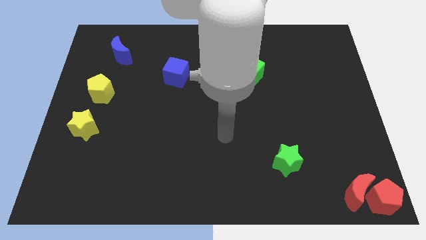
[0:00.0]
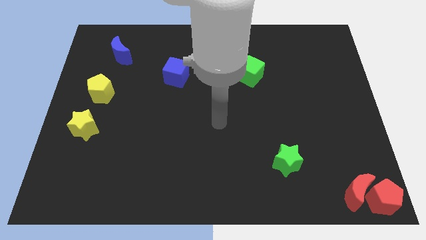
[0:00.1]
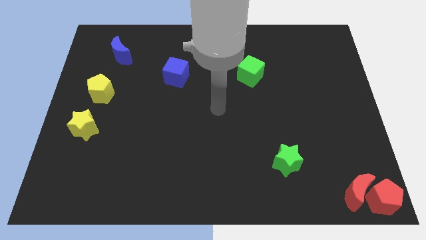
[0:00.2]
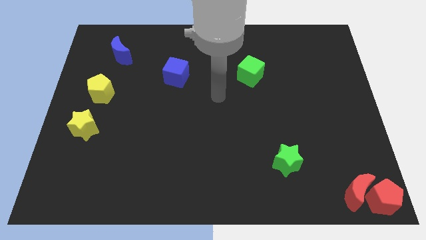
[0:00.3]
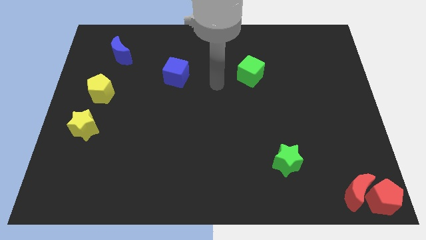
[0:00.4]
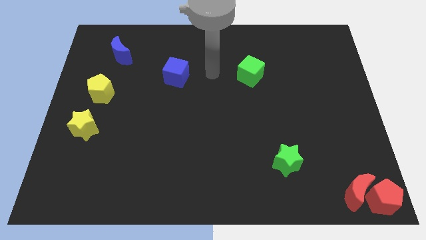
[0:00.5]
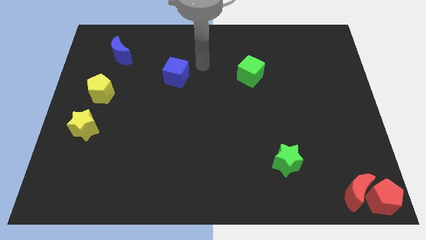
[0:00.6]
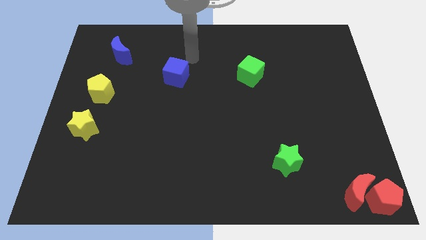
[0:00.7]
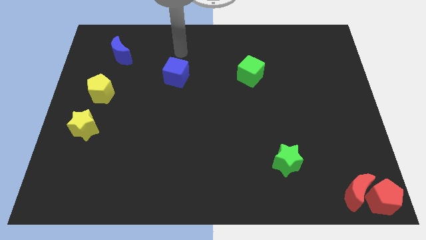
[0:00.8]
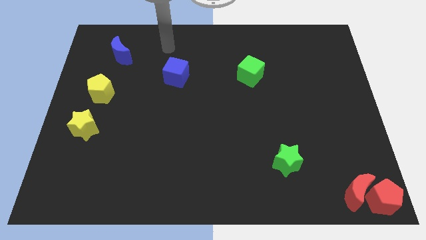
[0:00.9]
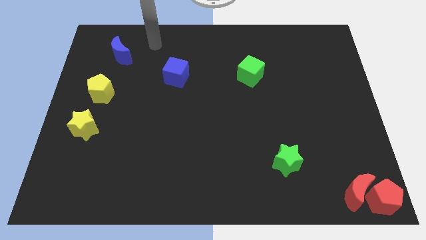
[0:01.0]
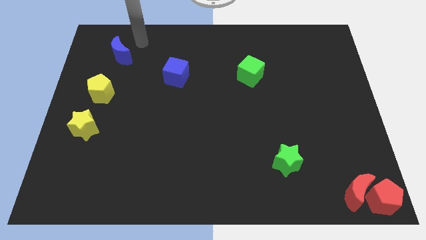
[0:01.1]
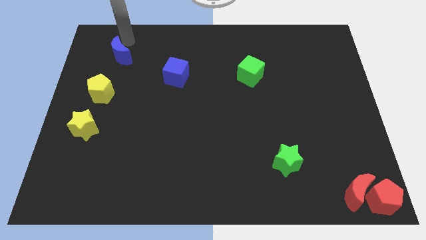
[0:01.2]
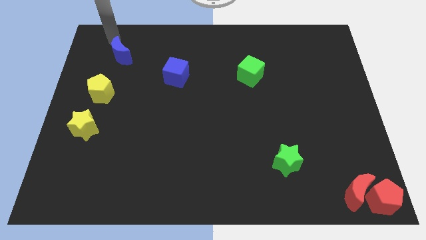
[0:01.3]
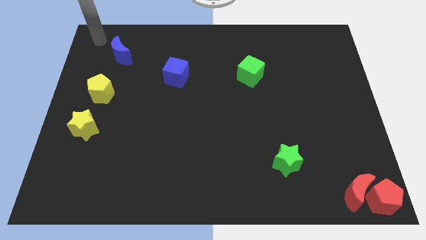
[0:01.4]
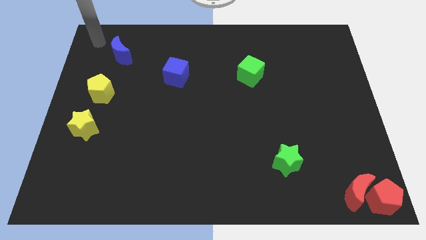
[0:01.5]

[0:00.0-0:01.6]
go to the left side of the blue crescent

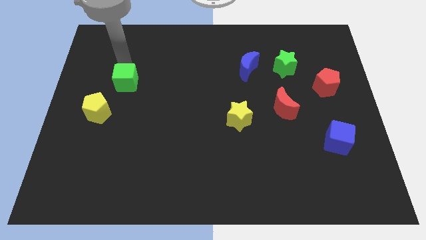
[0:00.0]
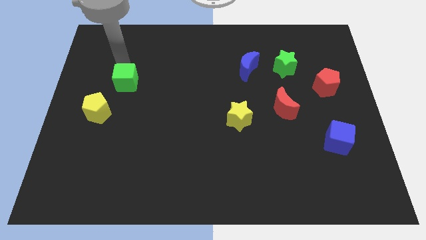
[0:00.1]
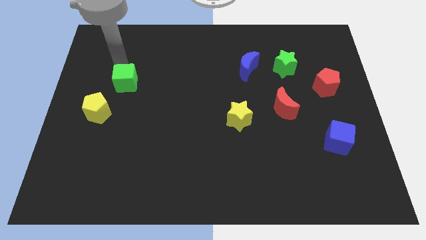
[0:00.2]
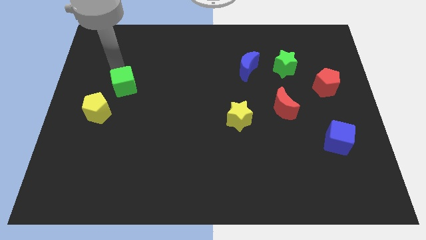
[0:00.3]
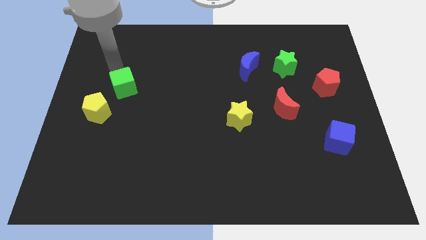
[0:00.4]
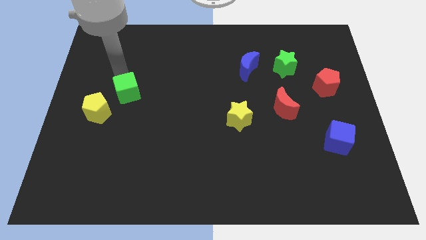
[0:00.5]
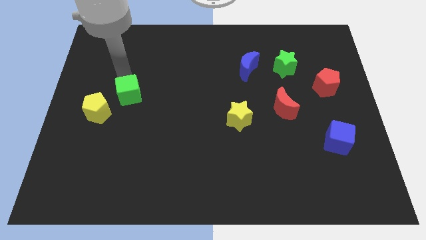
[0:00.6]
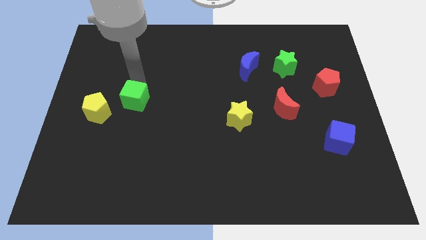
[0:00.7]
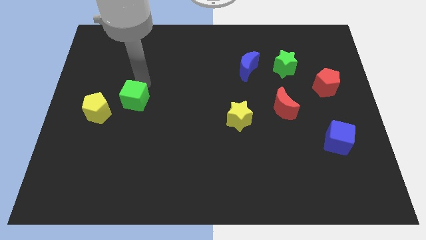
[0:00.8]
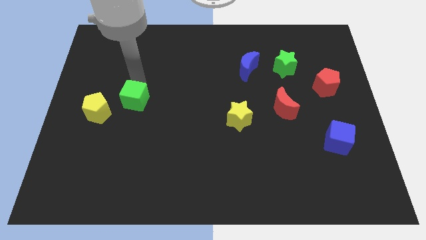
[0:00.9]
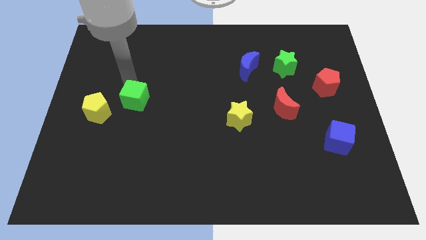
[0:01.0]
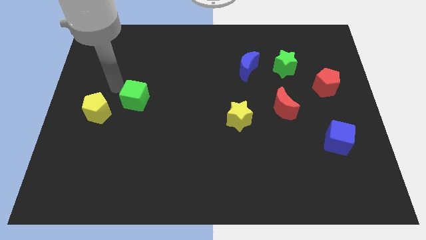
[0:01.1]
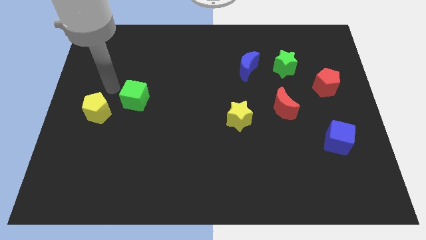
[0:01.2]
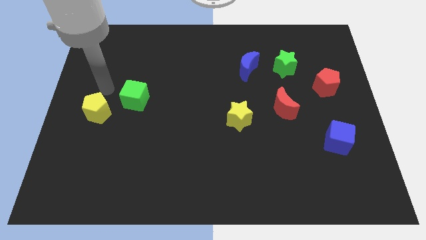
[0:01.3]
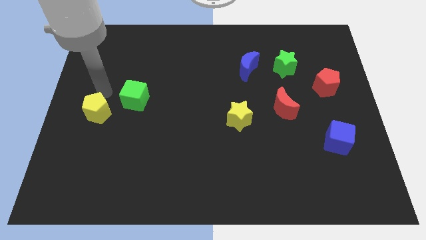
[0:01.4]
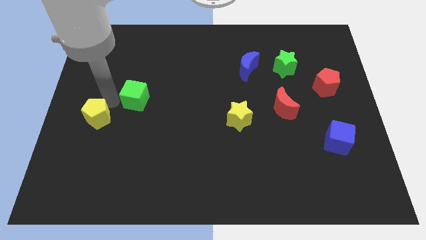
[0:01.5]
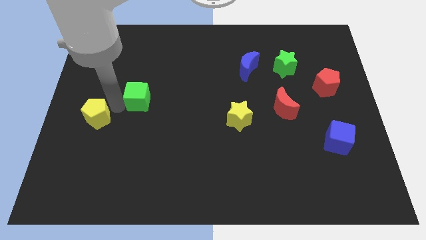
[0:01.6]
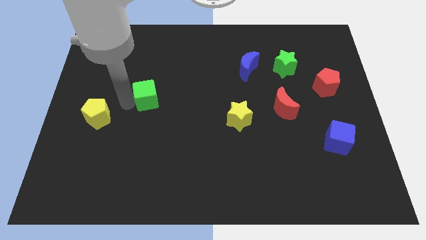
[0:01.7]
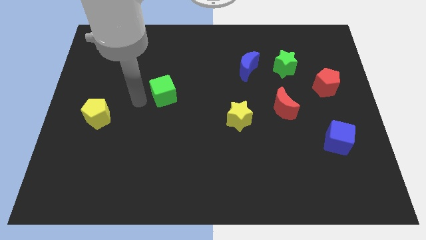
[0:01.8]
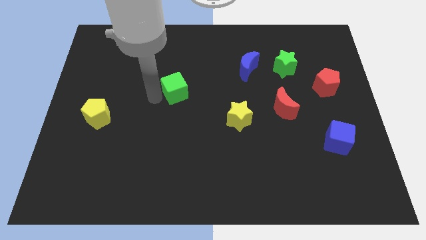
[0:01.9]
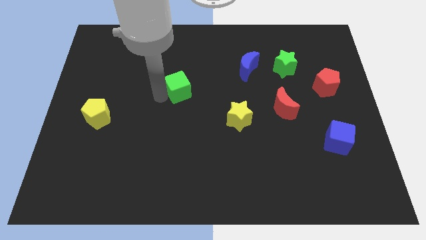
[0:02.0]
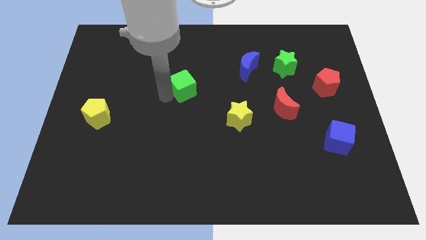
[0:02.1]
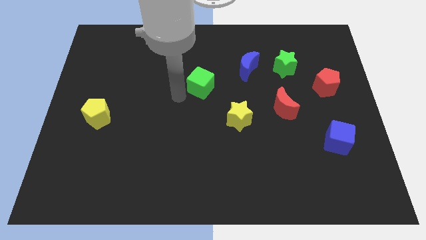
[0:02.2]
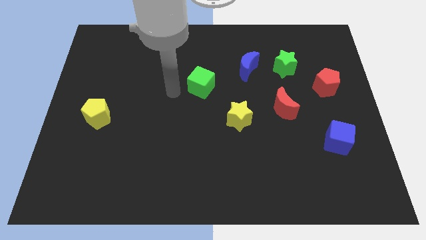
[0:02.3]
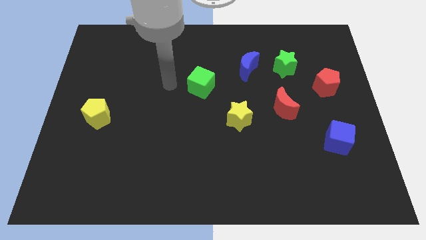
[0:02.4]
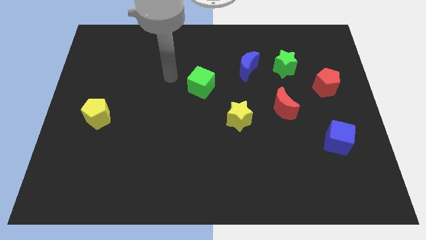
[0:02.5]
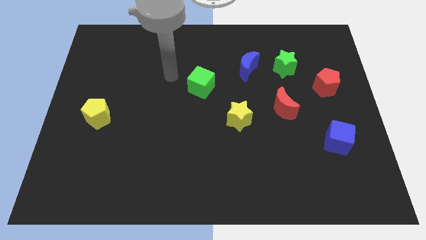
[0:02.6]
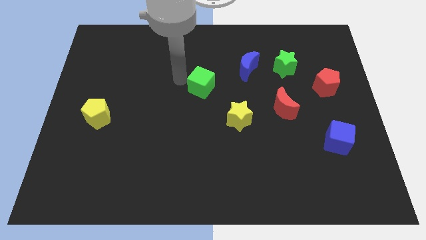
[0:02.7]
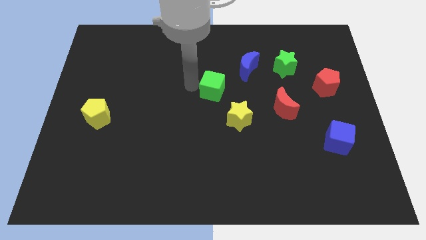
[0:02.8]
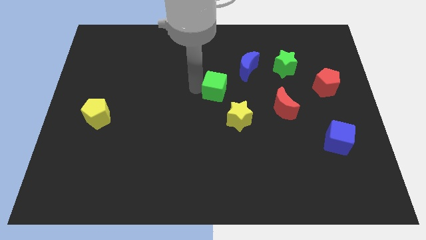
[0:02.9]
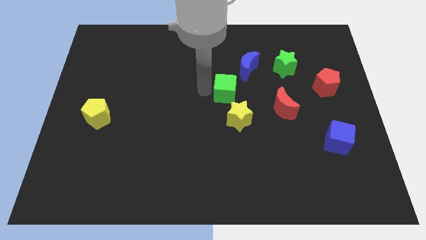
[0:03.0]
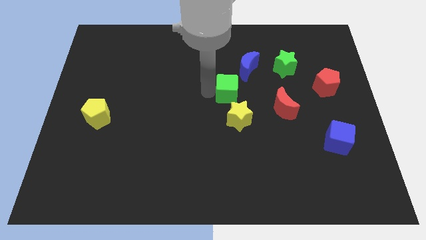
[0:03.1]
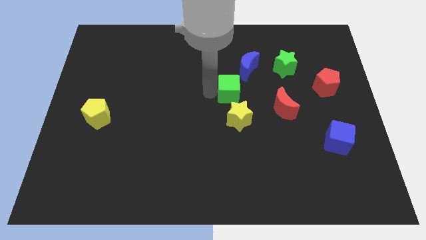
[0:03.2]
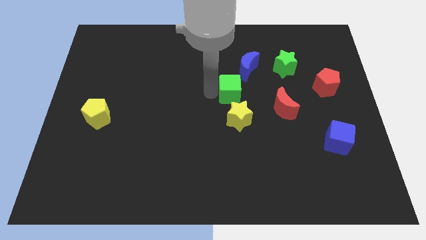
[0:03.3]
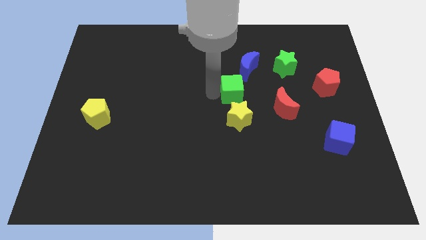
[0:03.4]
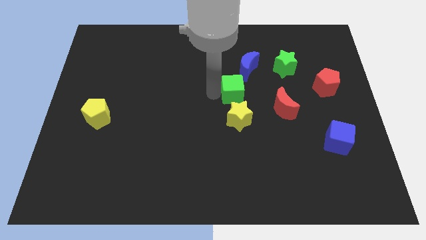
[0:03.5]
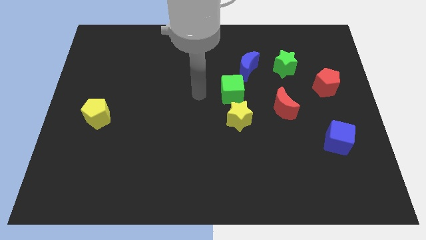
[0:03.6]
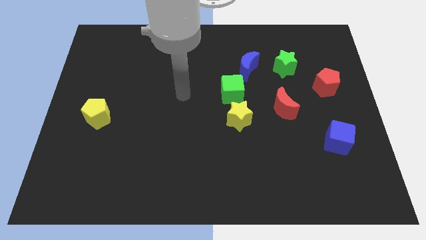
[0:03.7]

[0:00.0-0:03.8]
place green cube to the top of yellow star

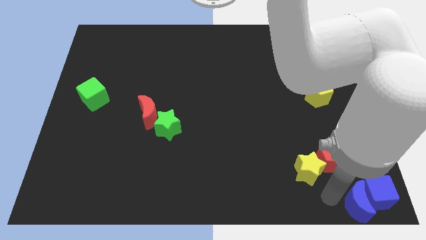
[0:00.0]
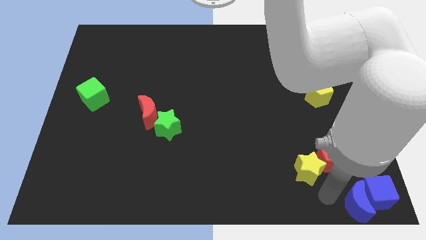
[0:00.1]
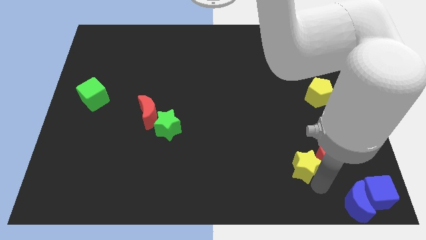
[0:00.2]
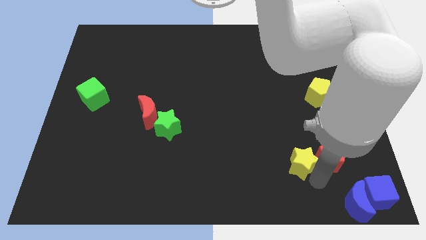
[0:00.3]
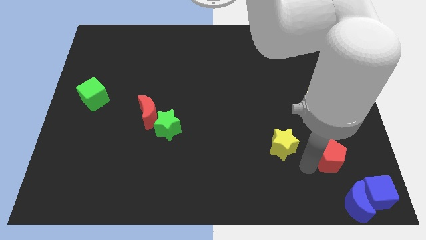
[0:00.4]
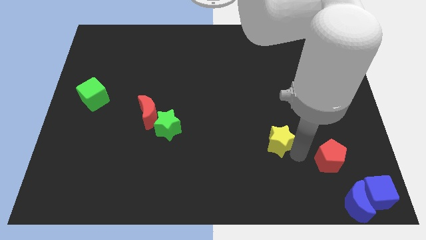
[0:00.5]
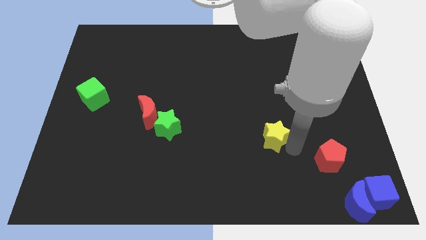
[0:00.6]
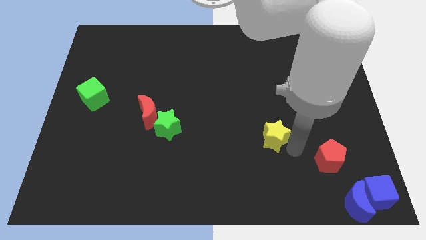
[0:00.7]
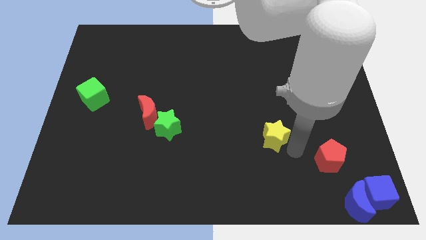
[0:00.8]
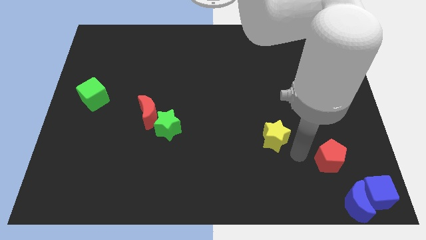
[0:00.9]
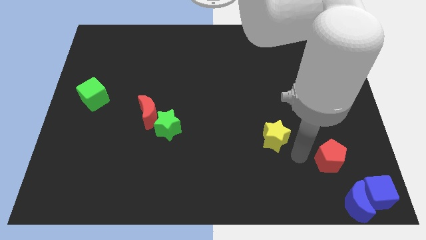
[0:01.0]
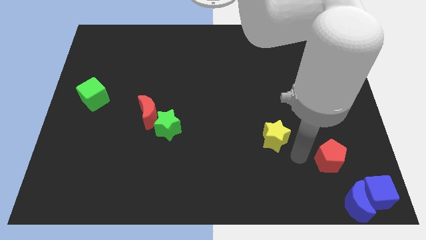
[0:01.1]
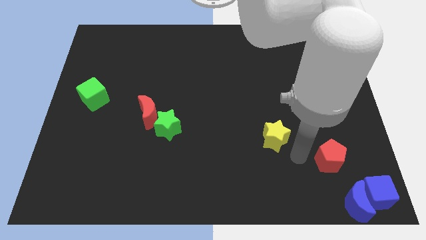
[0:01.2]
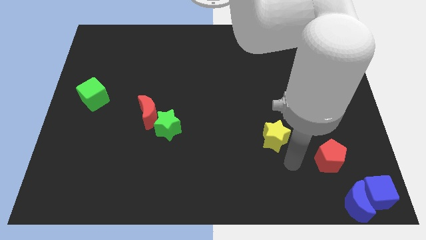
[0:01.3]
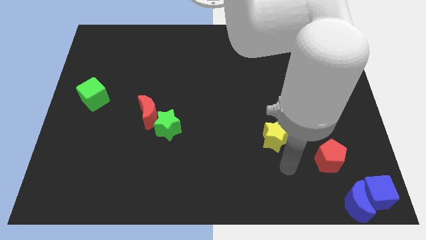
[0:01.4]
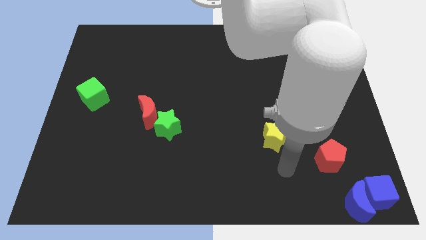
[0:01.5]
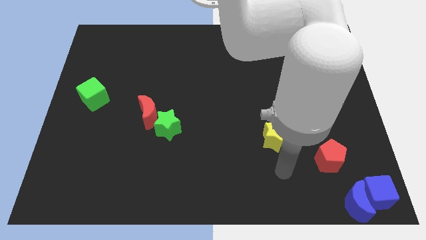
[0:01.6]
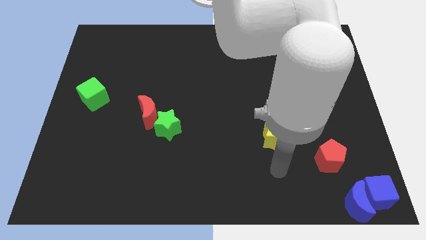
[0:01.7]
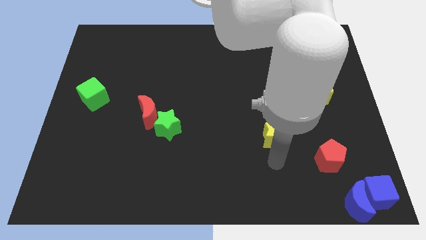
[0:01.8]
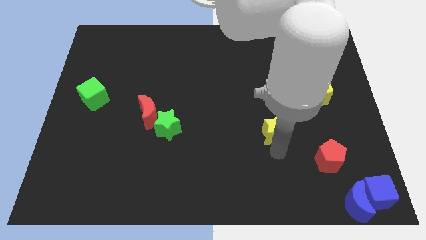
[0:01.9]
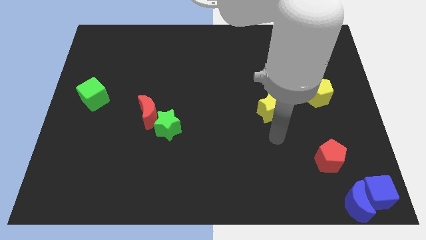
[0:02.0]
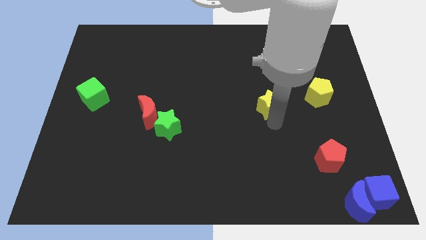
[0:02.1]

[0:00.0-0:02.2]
move yellow star slightly upwards

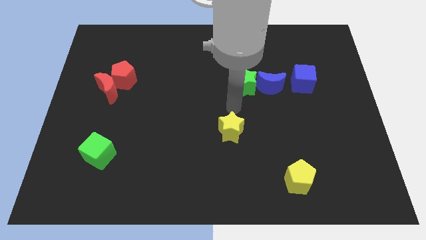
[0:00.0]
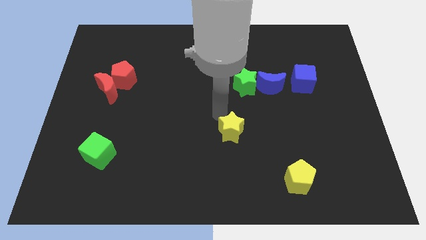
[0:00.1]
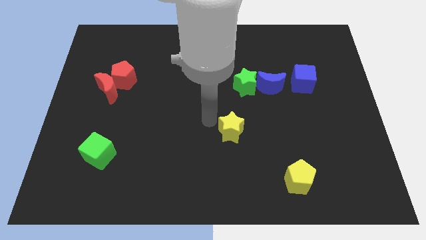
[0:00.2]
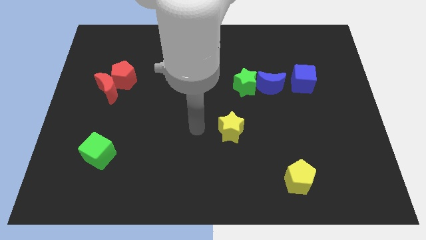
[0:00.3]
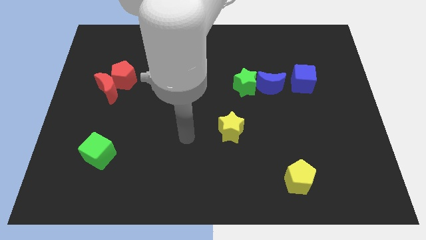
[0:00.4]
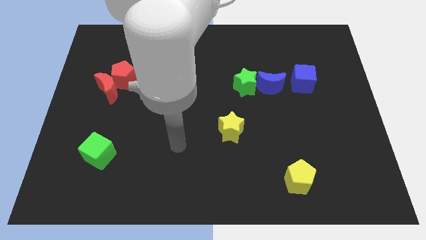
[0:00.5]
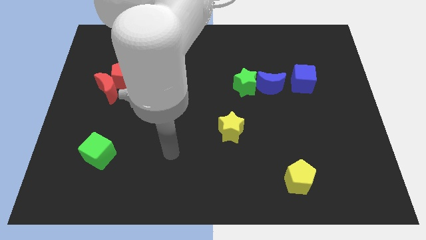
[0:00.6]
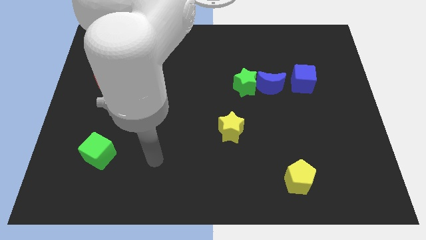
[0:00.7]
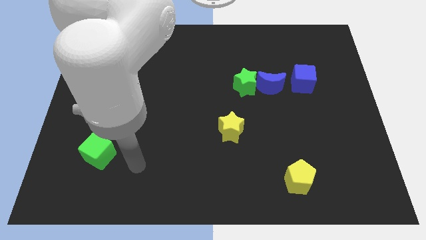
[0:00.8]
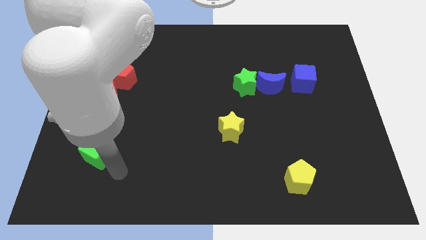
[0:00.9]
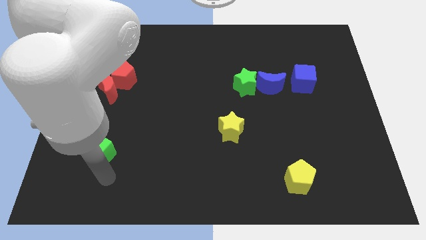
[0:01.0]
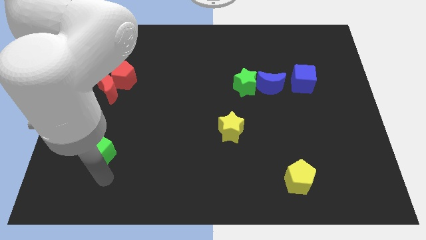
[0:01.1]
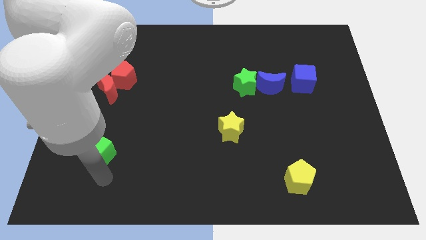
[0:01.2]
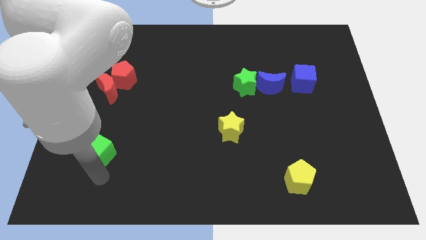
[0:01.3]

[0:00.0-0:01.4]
move your arm towards the green cube

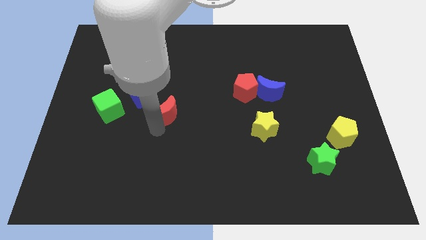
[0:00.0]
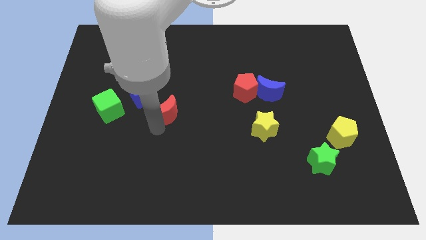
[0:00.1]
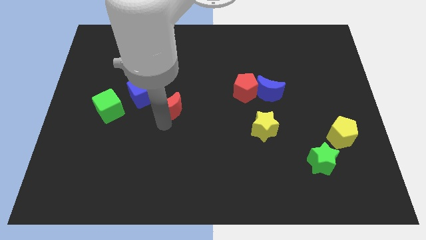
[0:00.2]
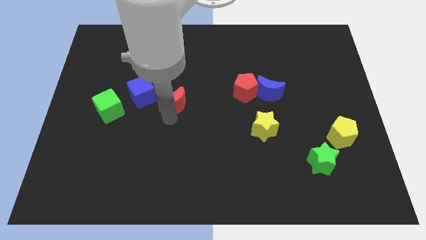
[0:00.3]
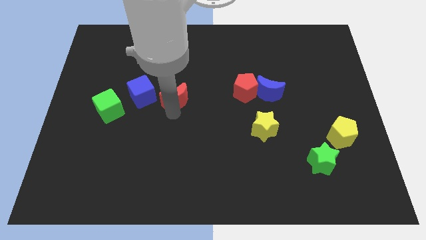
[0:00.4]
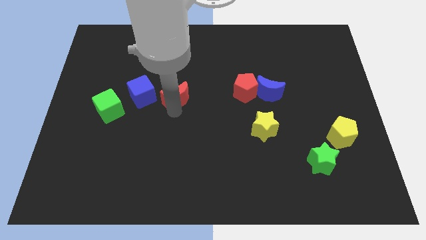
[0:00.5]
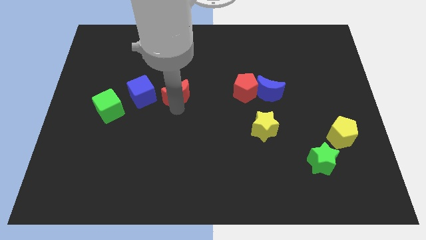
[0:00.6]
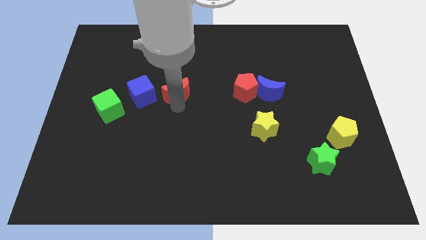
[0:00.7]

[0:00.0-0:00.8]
place the red moon right to the blue cube
